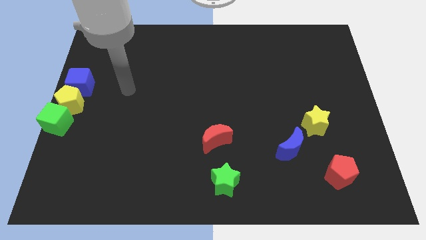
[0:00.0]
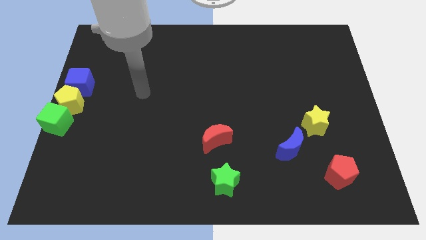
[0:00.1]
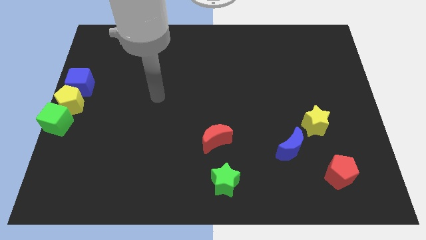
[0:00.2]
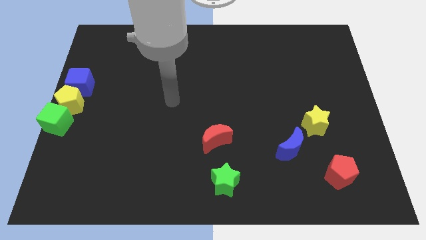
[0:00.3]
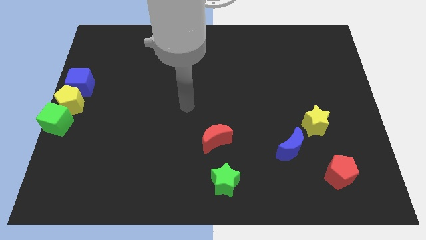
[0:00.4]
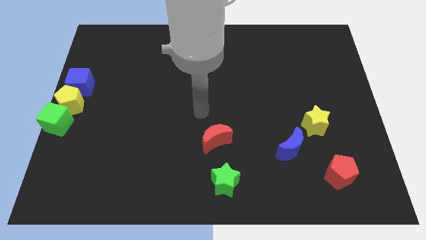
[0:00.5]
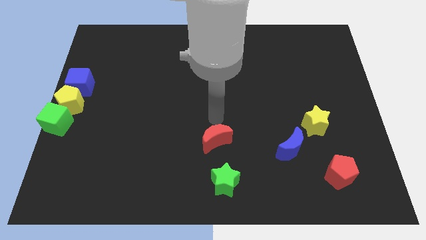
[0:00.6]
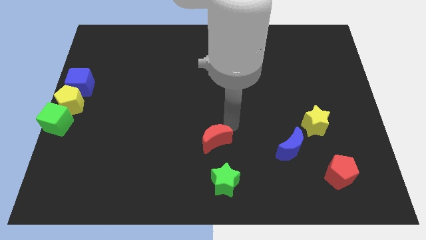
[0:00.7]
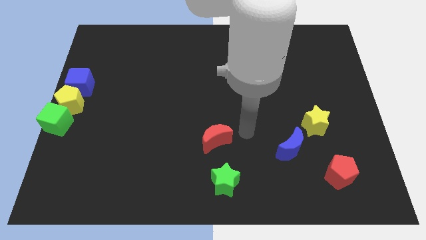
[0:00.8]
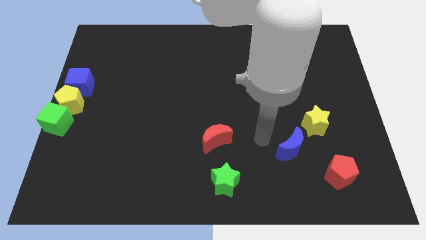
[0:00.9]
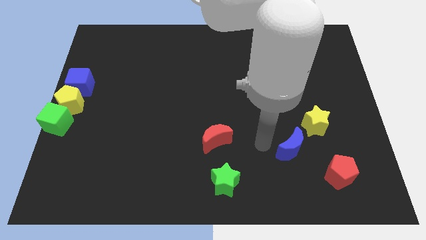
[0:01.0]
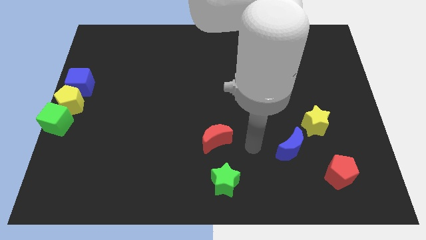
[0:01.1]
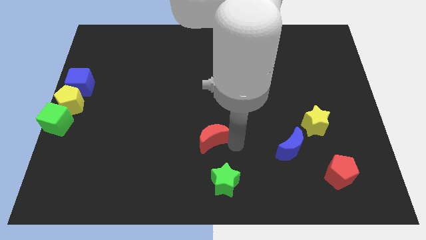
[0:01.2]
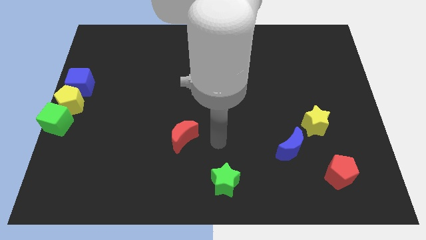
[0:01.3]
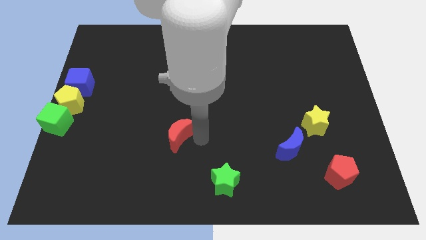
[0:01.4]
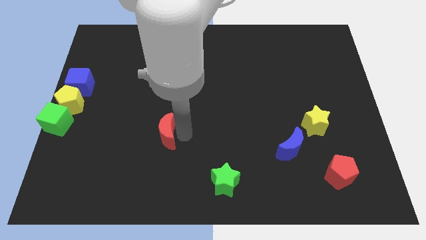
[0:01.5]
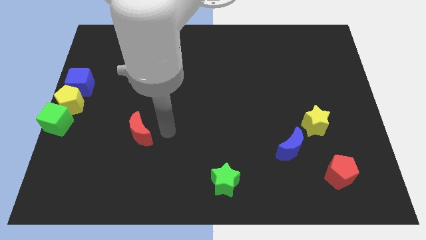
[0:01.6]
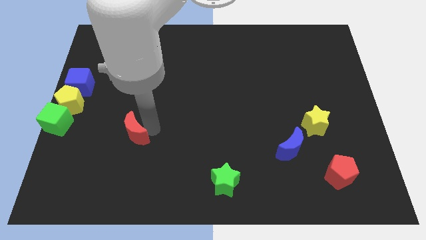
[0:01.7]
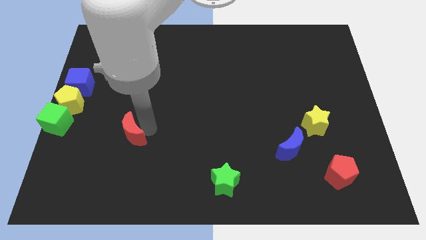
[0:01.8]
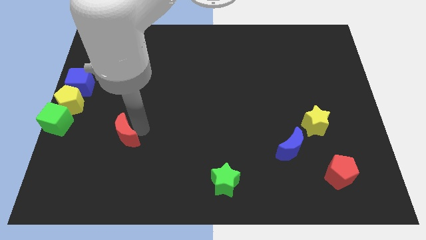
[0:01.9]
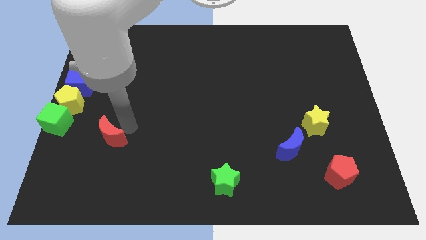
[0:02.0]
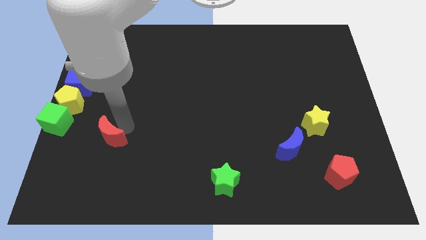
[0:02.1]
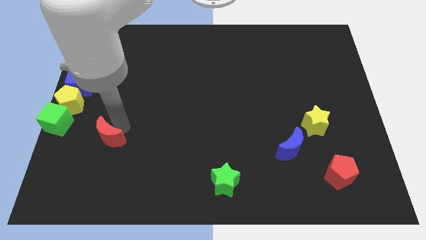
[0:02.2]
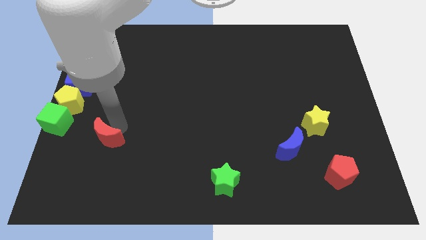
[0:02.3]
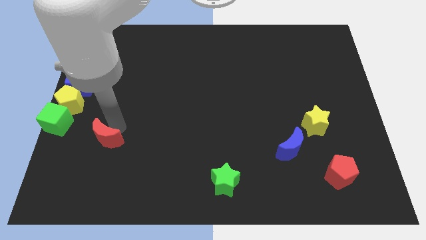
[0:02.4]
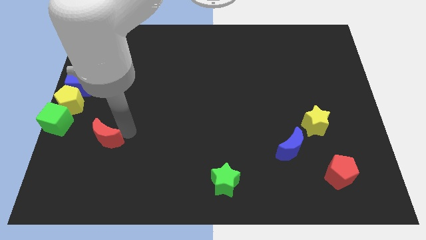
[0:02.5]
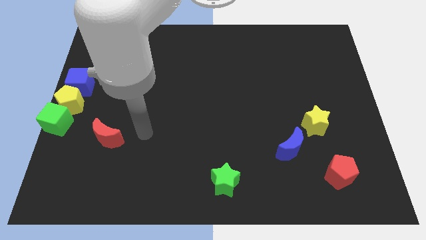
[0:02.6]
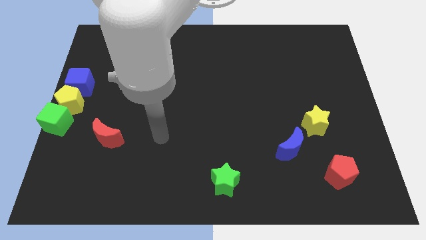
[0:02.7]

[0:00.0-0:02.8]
move red crescent towards green cube

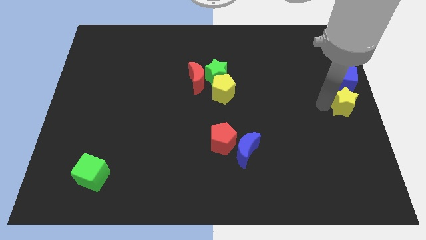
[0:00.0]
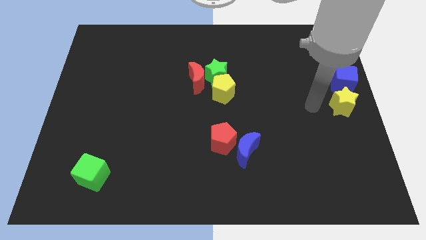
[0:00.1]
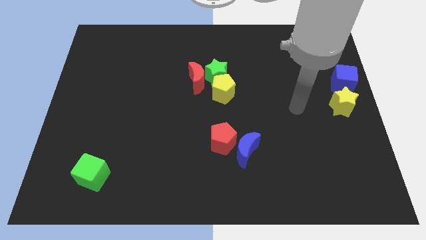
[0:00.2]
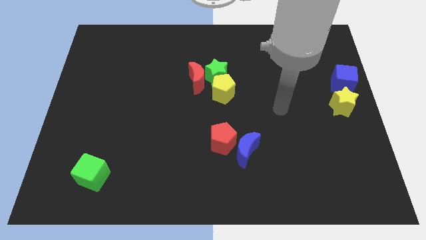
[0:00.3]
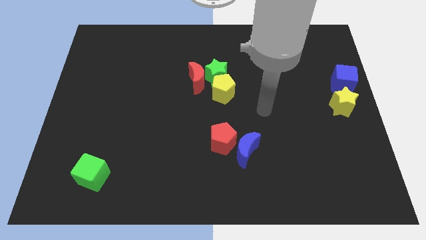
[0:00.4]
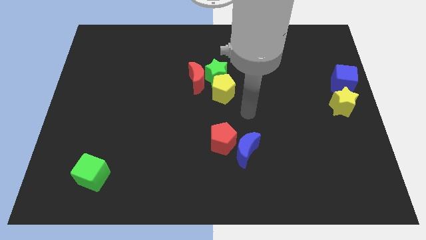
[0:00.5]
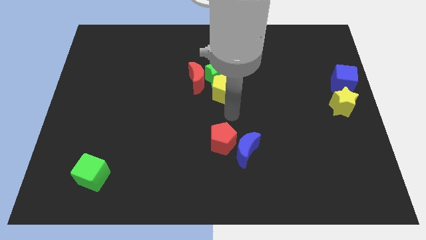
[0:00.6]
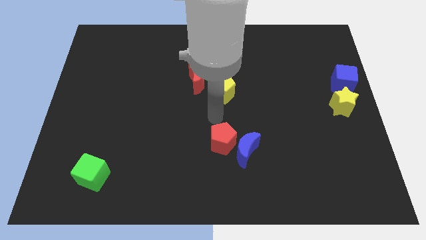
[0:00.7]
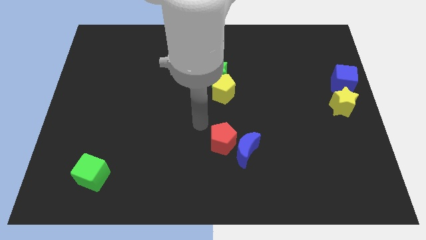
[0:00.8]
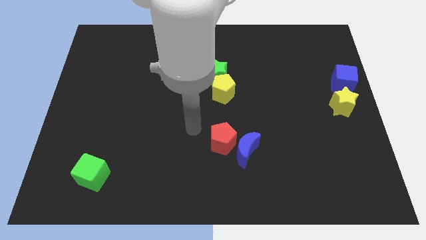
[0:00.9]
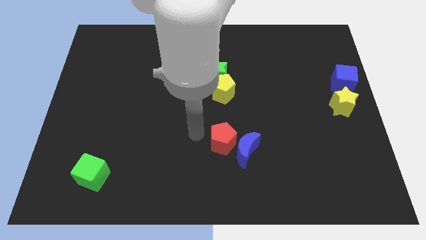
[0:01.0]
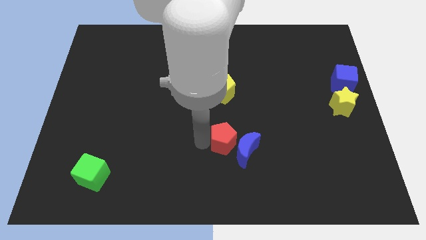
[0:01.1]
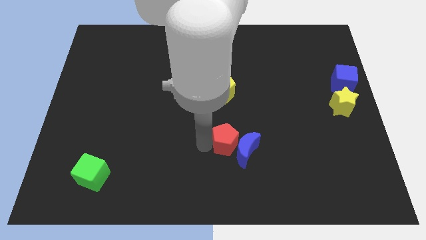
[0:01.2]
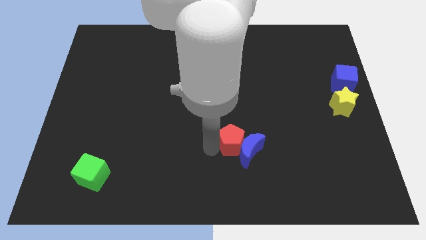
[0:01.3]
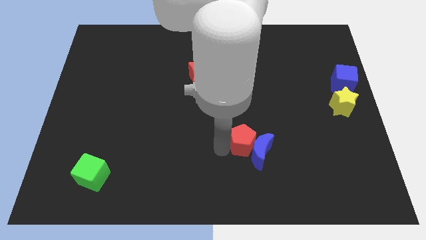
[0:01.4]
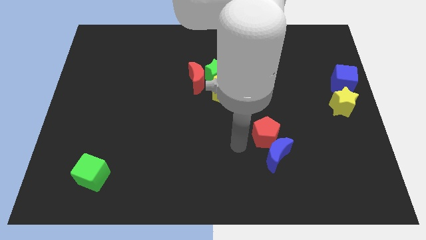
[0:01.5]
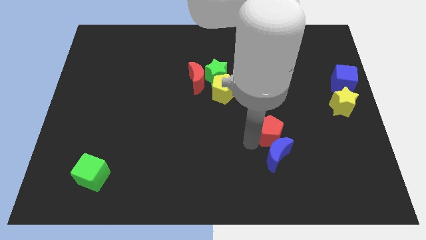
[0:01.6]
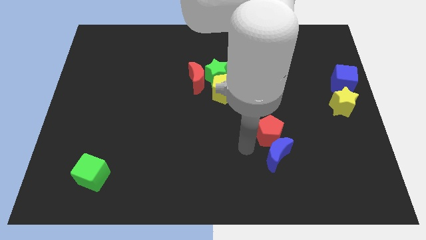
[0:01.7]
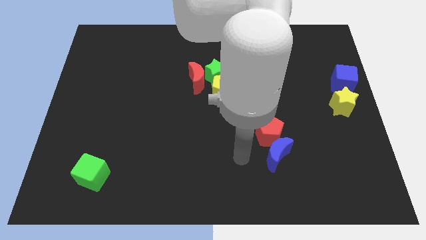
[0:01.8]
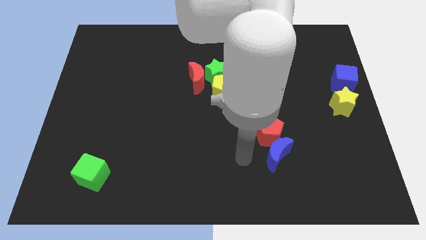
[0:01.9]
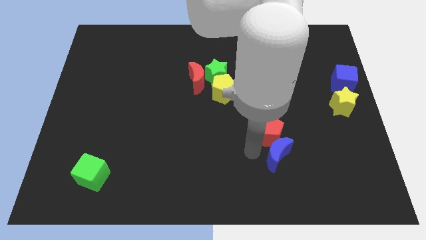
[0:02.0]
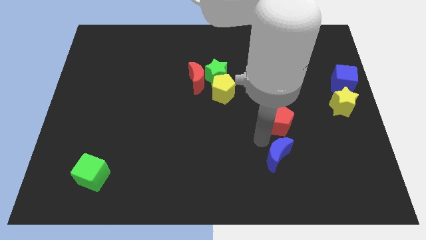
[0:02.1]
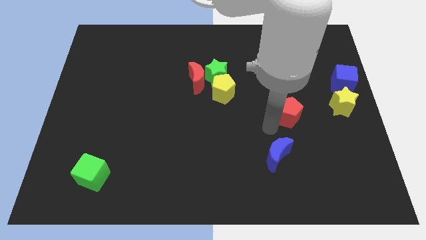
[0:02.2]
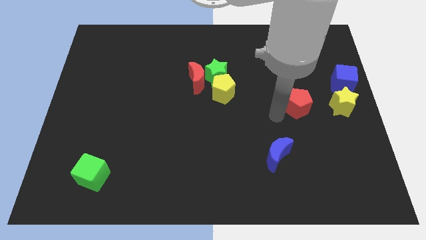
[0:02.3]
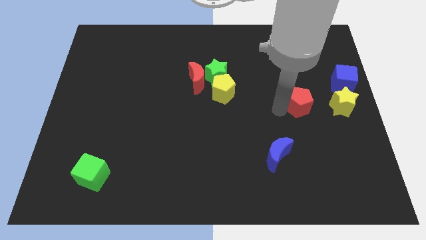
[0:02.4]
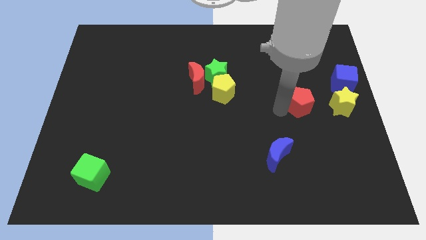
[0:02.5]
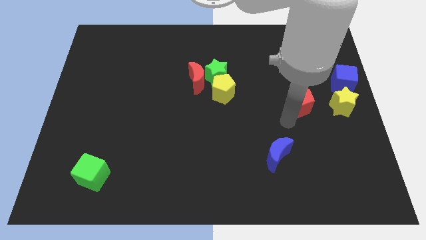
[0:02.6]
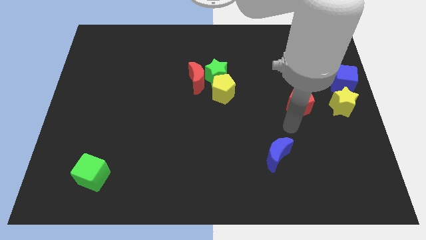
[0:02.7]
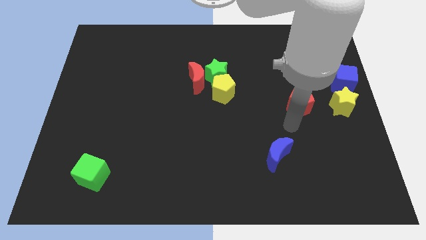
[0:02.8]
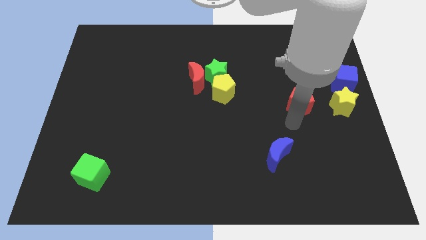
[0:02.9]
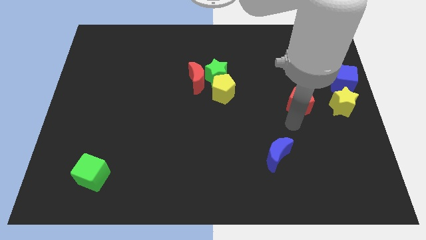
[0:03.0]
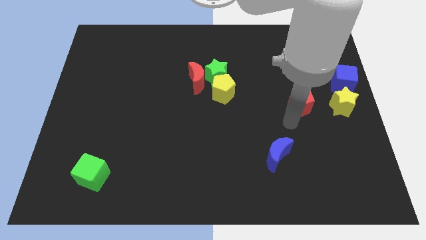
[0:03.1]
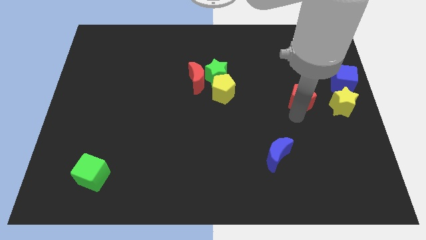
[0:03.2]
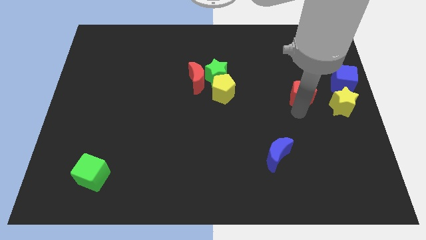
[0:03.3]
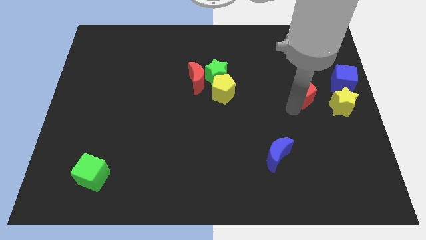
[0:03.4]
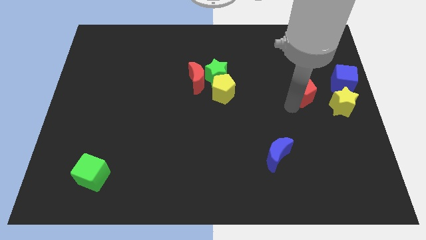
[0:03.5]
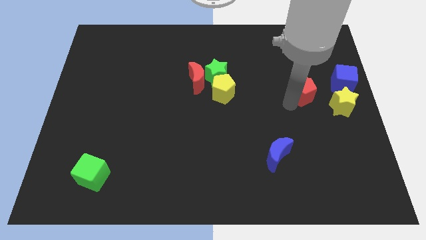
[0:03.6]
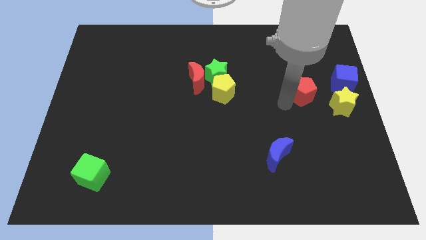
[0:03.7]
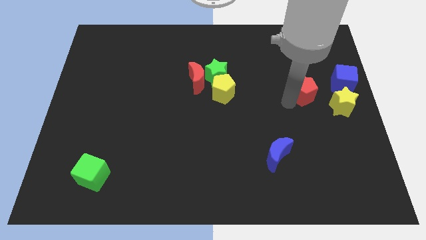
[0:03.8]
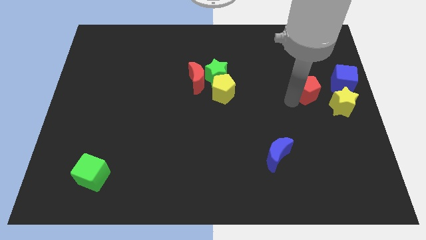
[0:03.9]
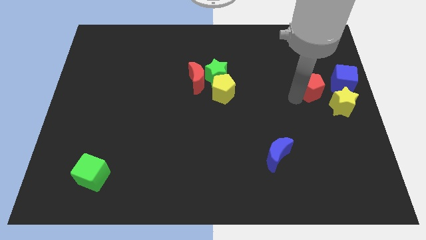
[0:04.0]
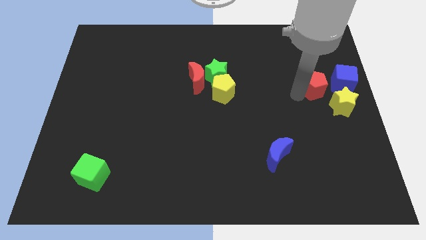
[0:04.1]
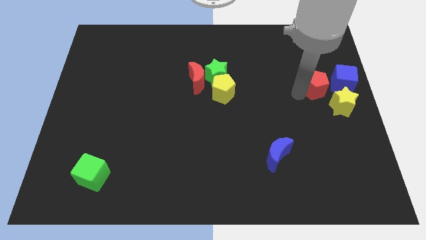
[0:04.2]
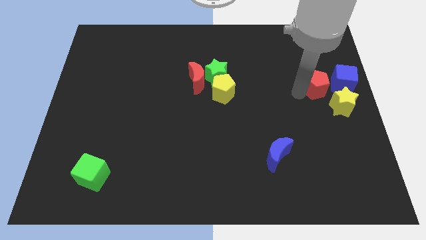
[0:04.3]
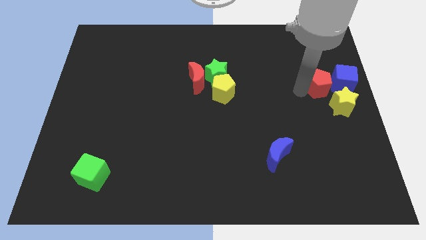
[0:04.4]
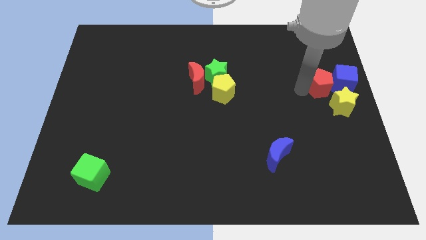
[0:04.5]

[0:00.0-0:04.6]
move the red pentagon to the left of the blue cube

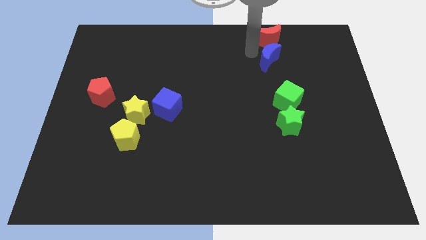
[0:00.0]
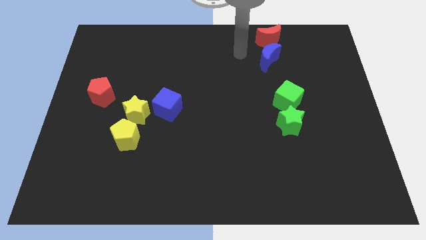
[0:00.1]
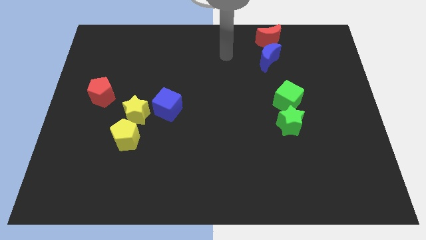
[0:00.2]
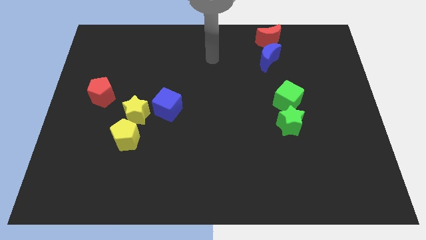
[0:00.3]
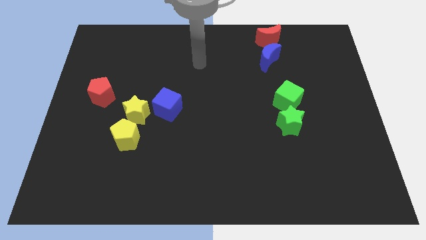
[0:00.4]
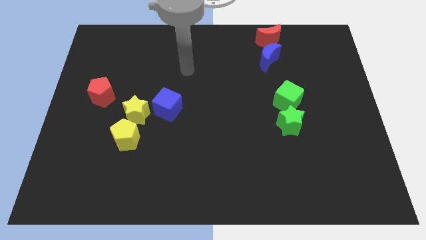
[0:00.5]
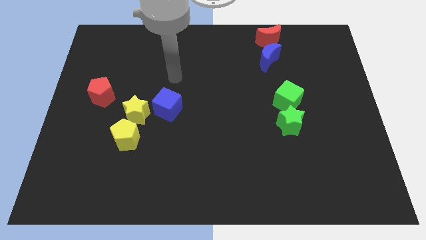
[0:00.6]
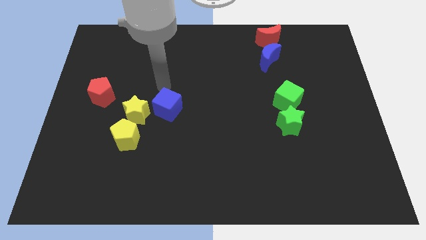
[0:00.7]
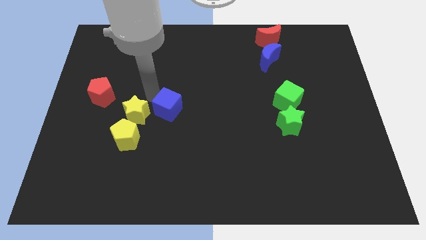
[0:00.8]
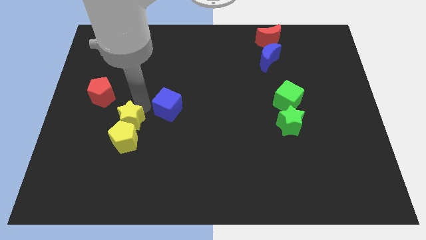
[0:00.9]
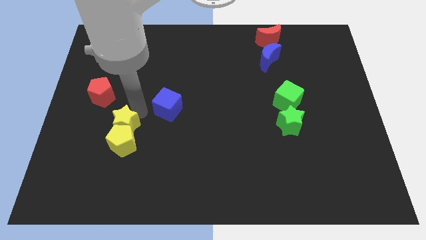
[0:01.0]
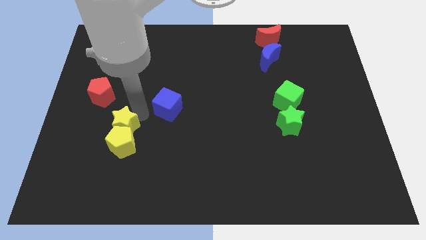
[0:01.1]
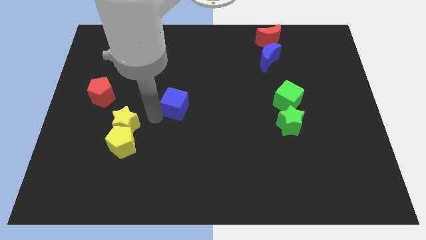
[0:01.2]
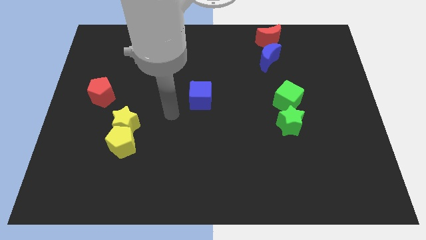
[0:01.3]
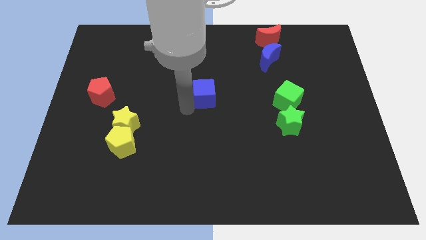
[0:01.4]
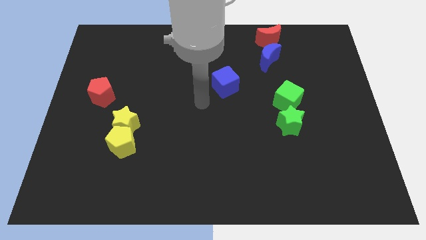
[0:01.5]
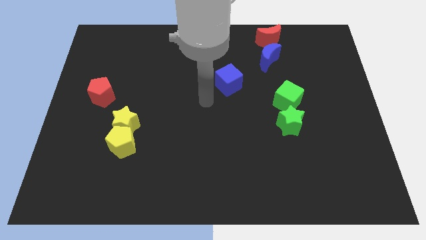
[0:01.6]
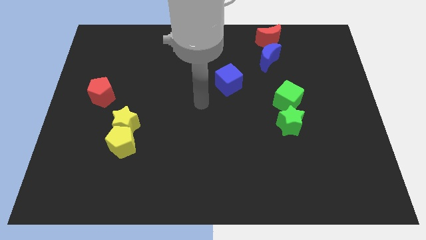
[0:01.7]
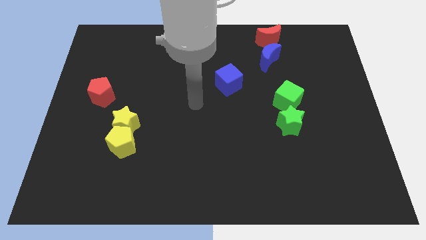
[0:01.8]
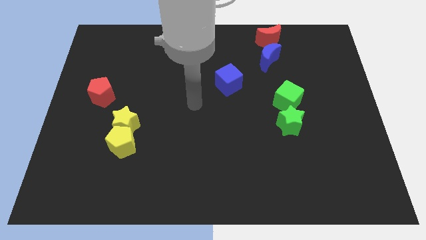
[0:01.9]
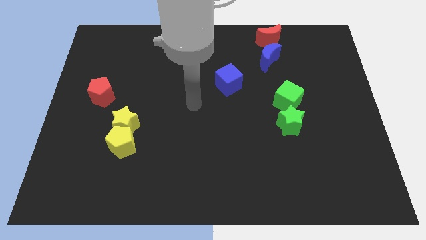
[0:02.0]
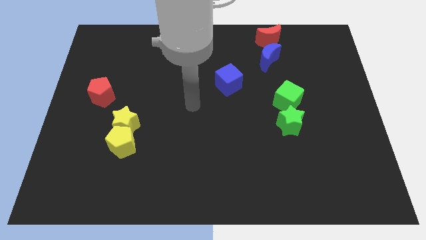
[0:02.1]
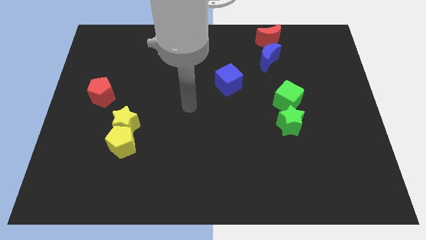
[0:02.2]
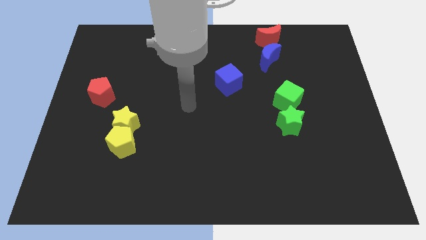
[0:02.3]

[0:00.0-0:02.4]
move the blue cube away from the yellow star
